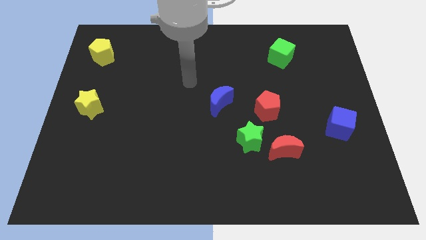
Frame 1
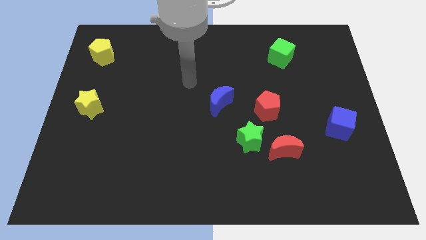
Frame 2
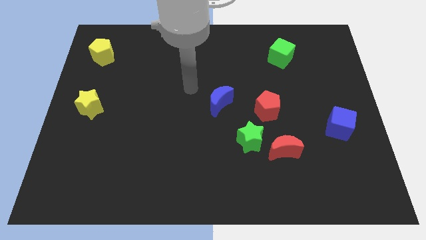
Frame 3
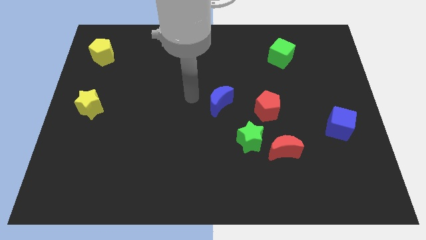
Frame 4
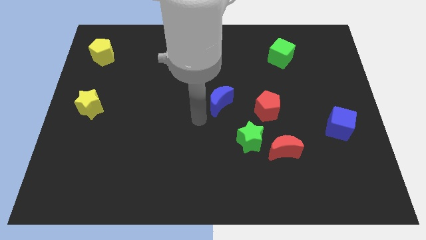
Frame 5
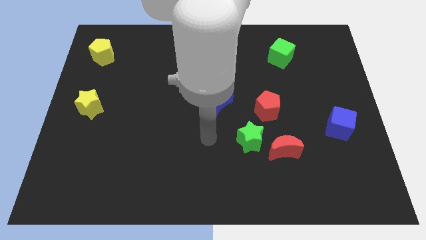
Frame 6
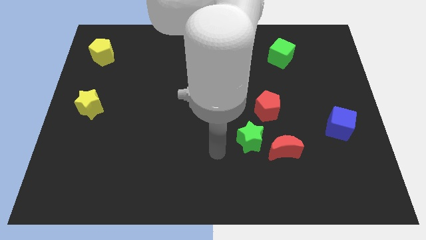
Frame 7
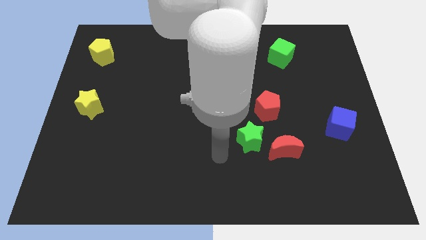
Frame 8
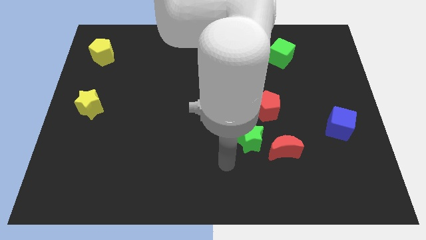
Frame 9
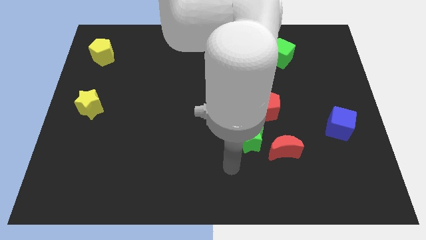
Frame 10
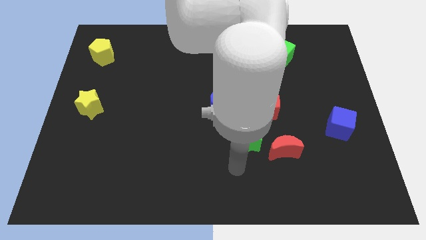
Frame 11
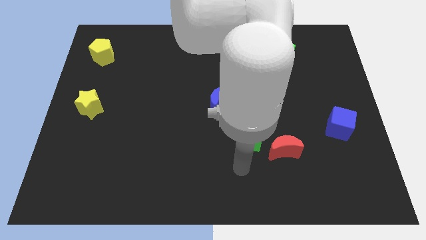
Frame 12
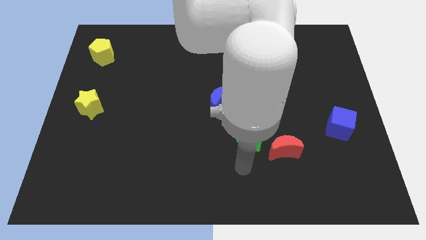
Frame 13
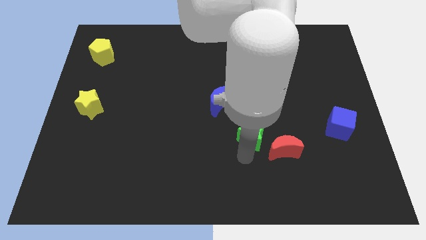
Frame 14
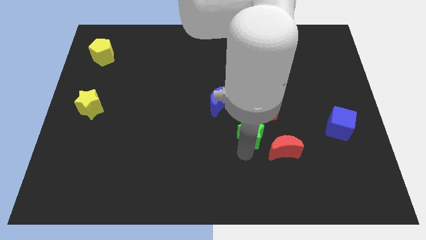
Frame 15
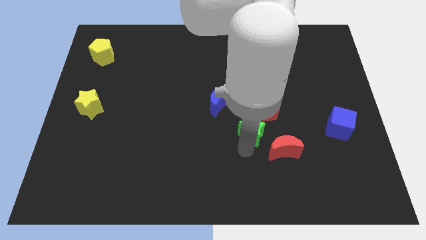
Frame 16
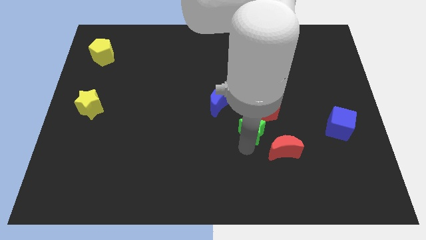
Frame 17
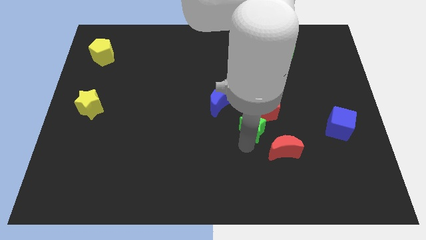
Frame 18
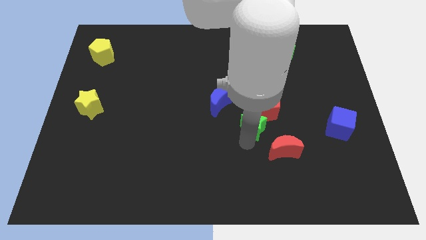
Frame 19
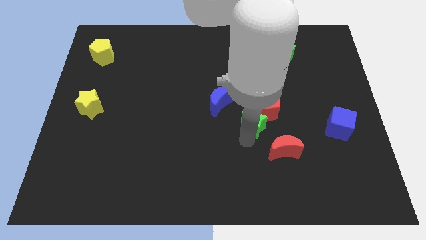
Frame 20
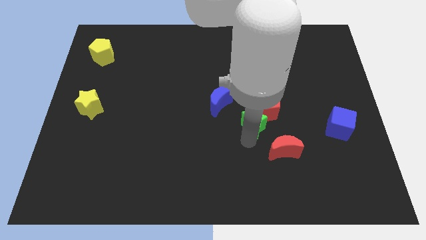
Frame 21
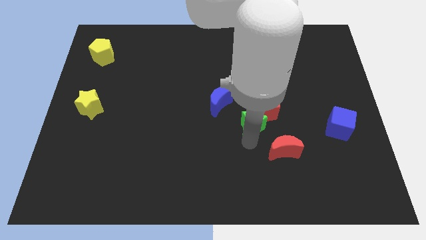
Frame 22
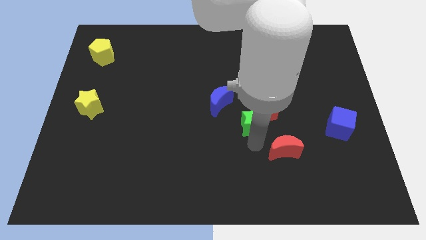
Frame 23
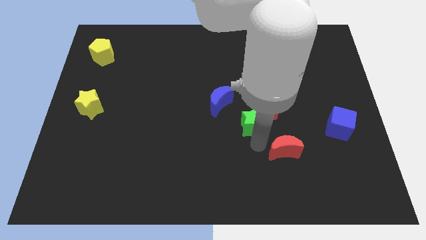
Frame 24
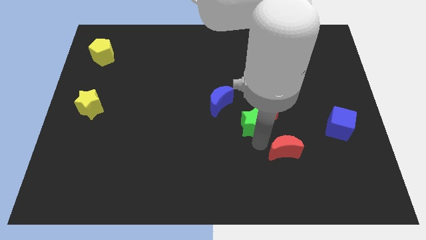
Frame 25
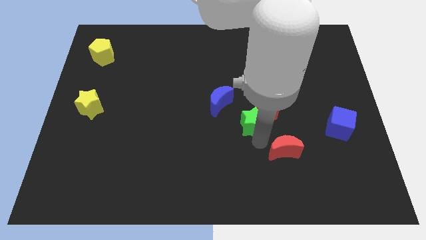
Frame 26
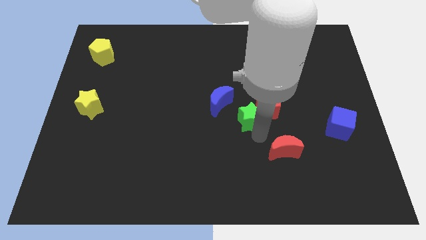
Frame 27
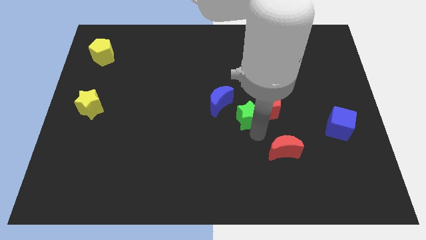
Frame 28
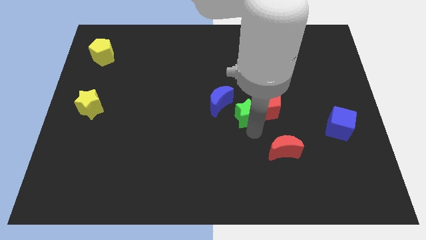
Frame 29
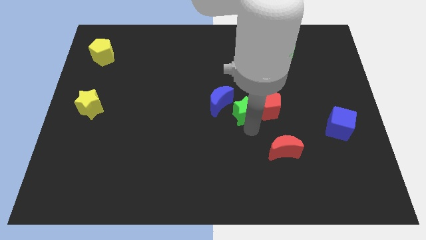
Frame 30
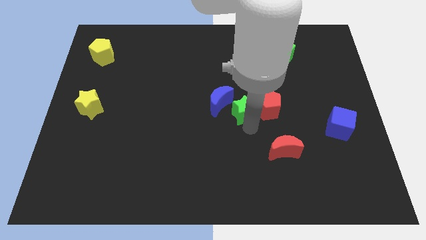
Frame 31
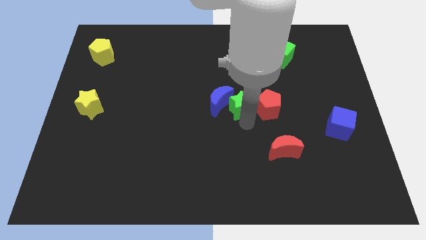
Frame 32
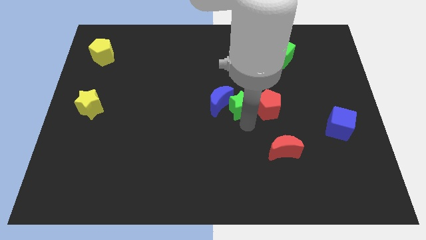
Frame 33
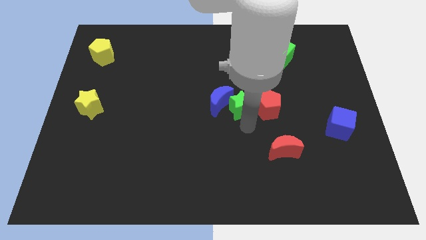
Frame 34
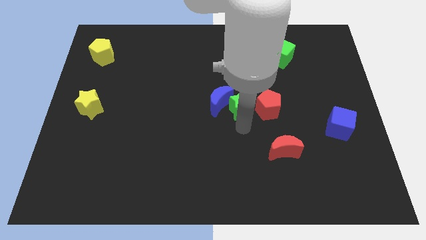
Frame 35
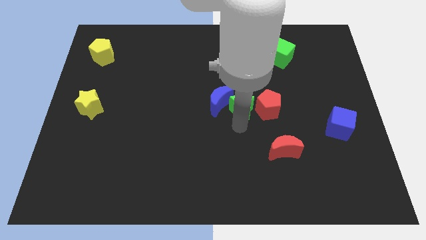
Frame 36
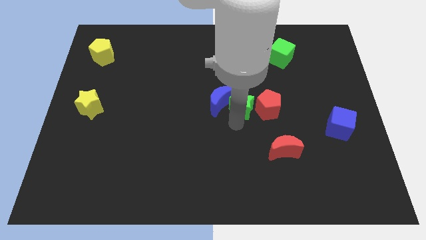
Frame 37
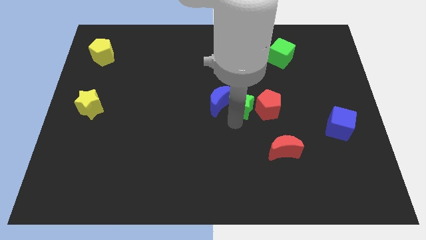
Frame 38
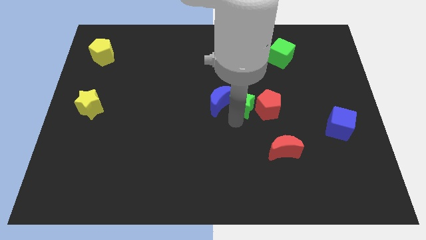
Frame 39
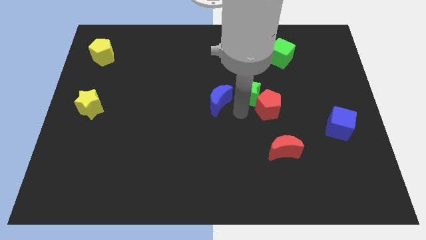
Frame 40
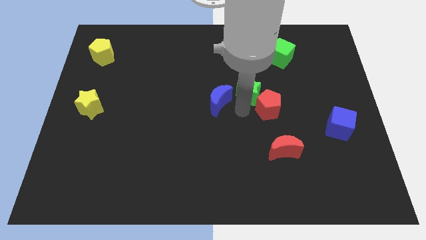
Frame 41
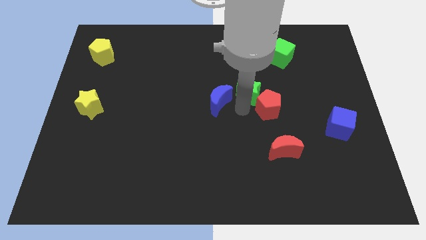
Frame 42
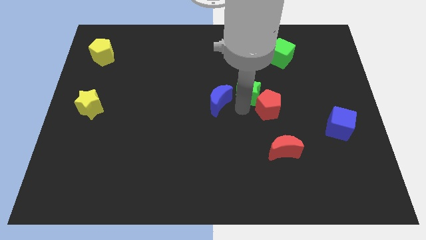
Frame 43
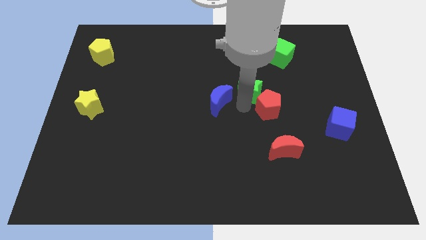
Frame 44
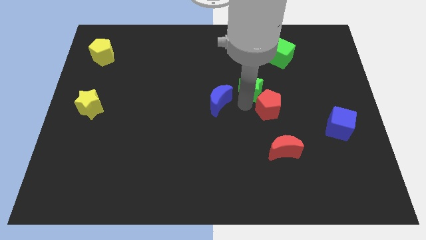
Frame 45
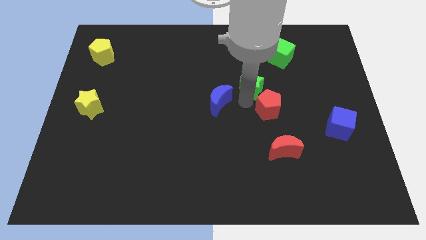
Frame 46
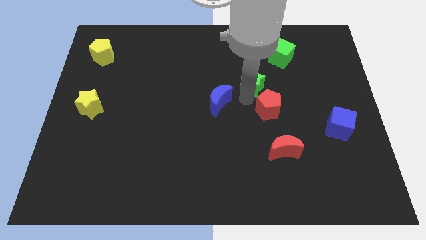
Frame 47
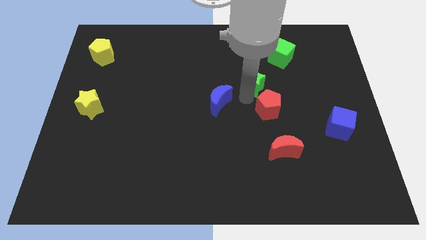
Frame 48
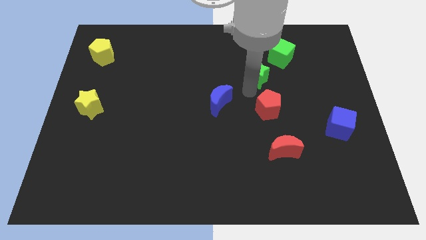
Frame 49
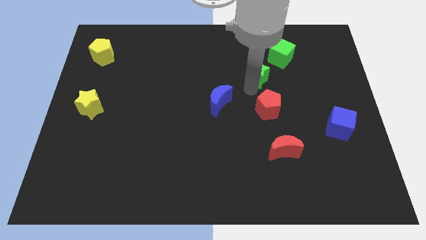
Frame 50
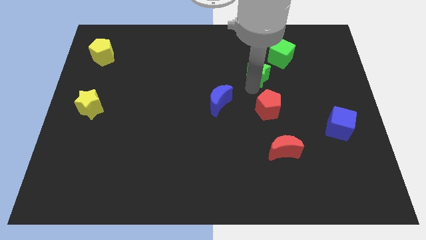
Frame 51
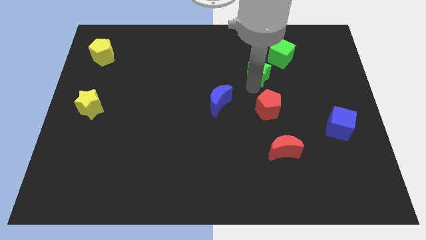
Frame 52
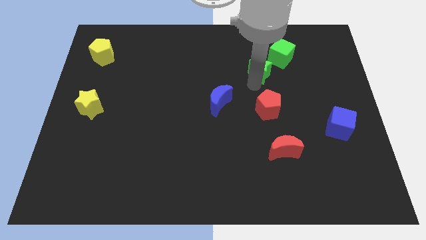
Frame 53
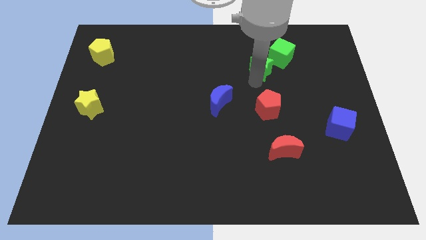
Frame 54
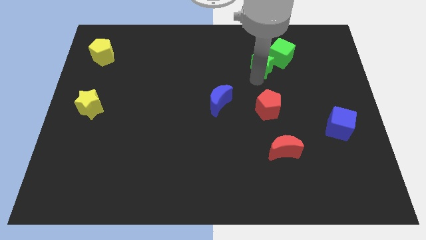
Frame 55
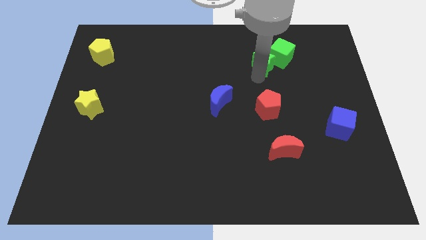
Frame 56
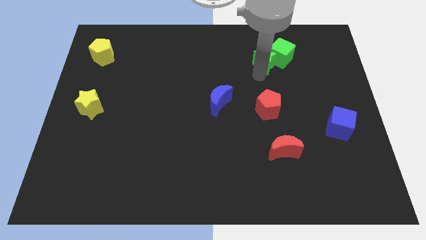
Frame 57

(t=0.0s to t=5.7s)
put the green star to the green cube

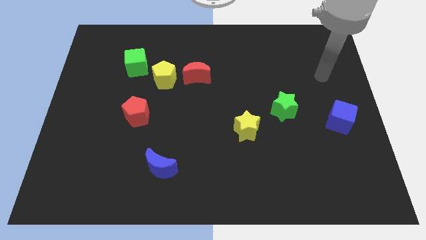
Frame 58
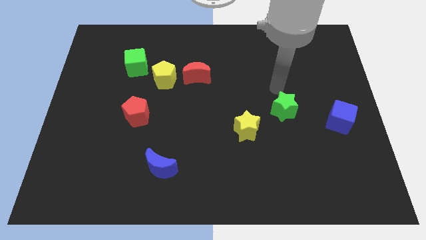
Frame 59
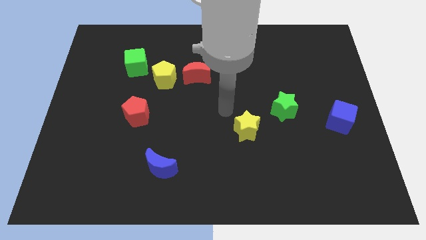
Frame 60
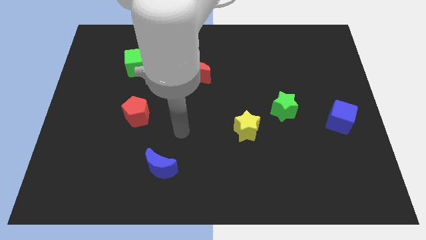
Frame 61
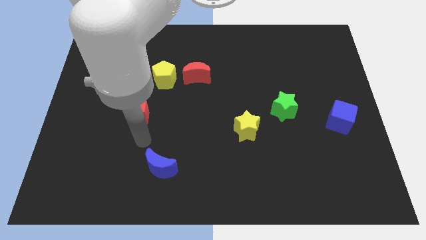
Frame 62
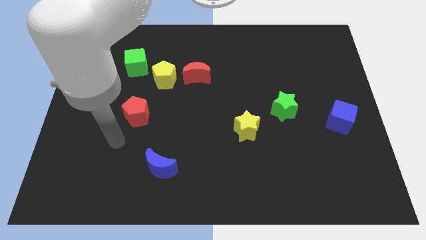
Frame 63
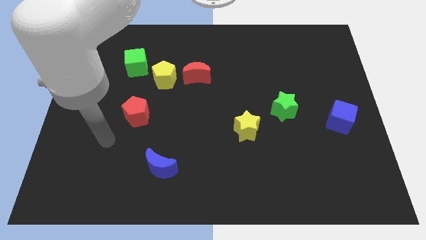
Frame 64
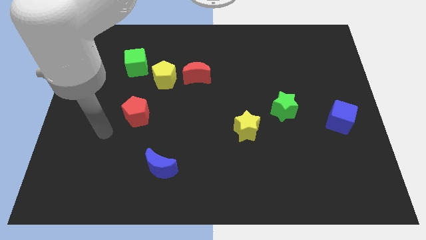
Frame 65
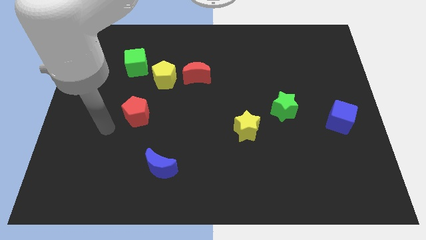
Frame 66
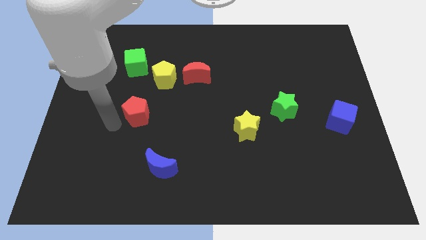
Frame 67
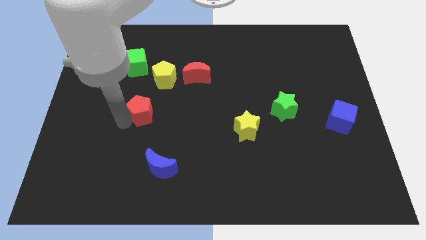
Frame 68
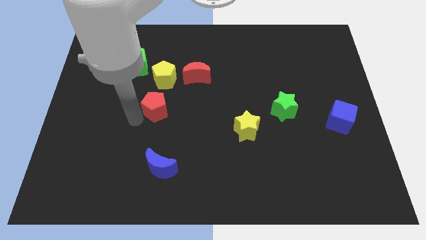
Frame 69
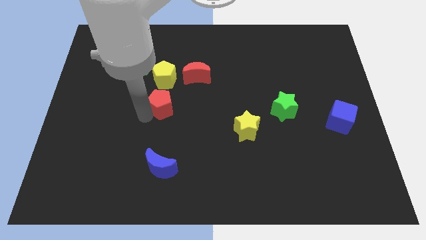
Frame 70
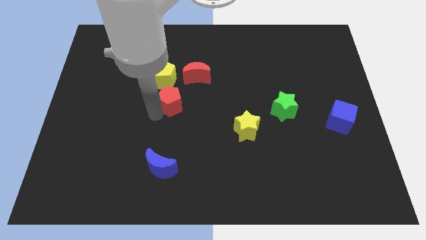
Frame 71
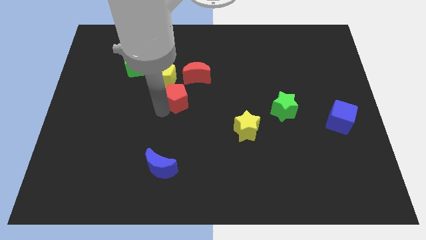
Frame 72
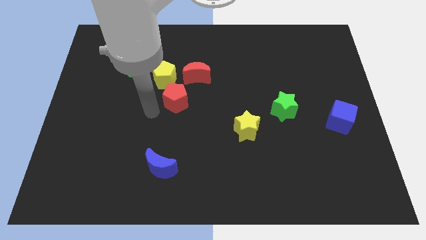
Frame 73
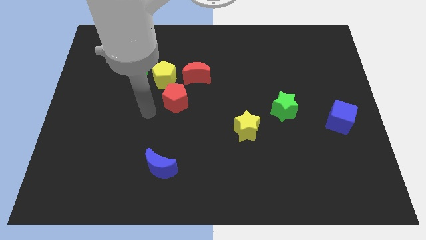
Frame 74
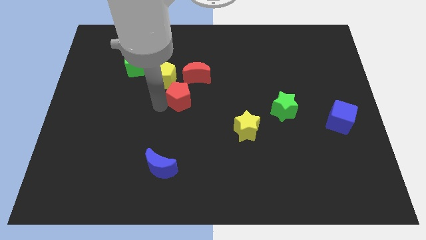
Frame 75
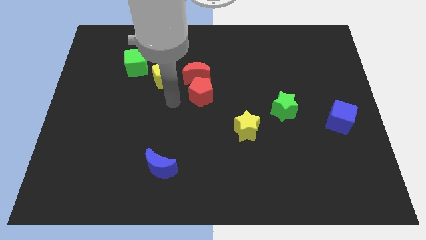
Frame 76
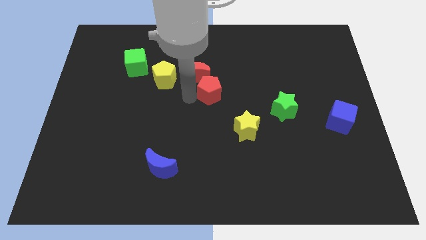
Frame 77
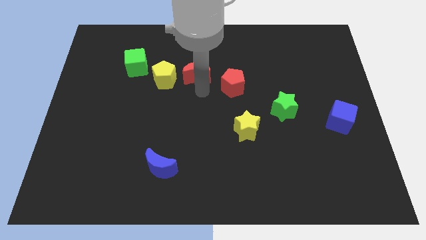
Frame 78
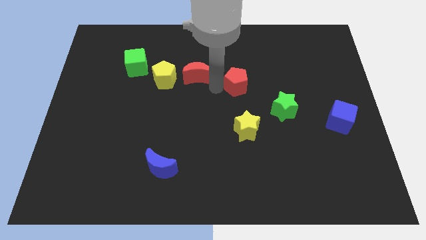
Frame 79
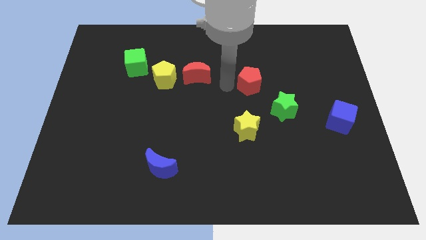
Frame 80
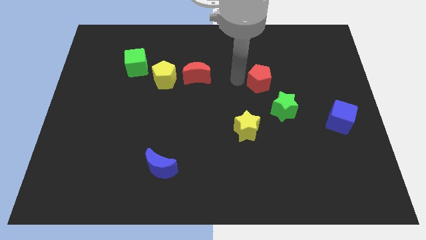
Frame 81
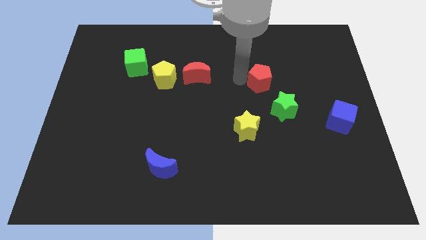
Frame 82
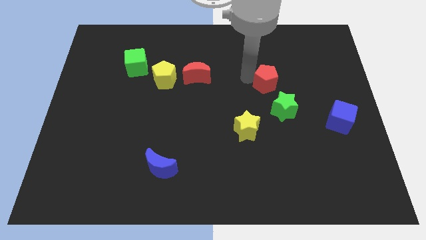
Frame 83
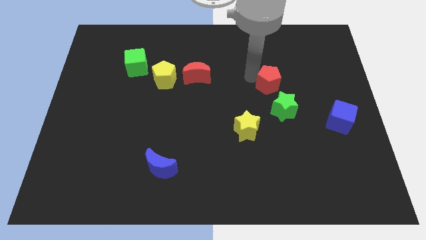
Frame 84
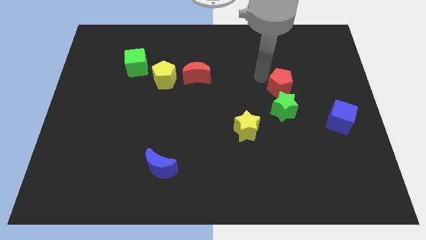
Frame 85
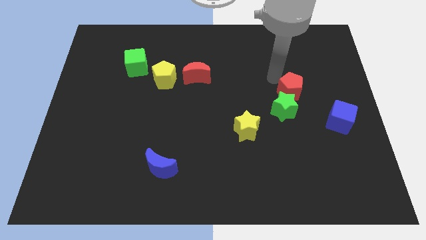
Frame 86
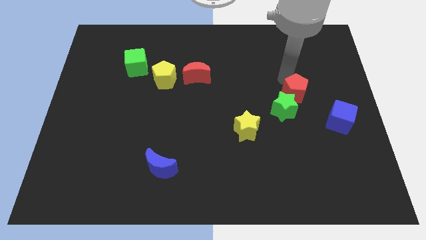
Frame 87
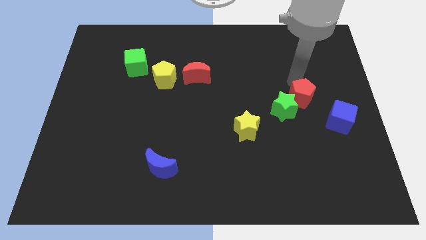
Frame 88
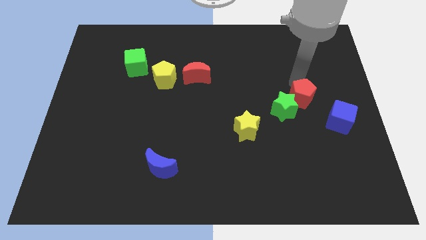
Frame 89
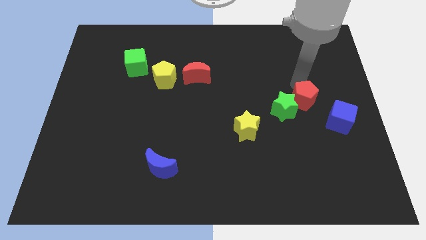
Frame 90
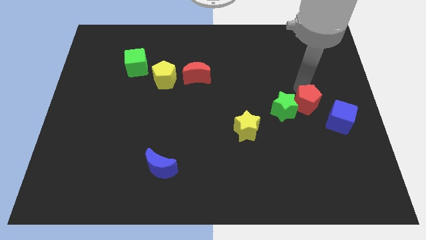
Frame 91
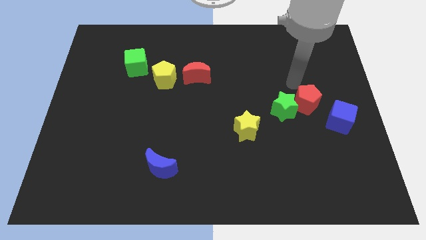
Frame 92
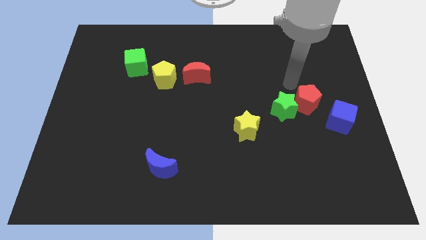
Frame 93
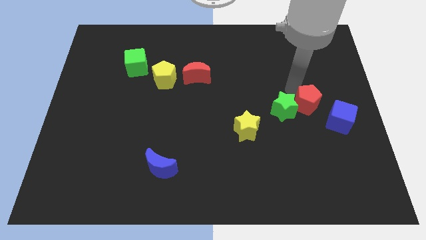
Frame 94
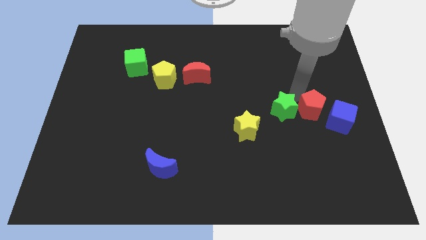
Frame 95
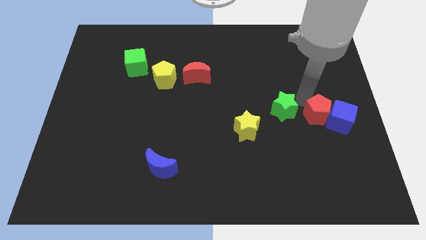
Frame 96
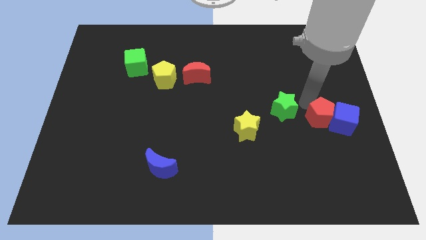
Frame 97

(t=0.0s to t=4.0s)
move the red pentagon next to the blue cube
